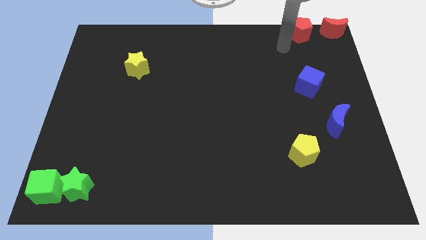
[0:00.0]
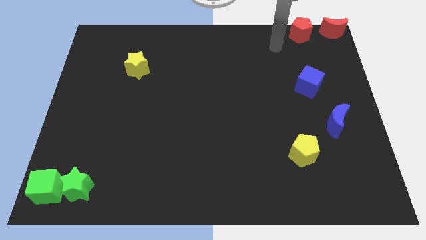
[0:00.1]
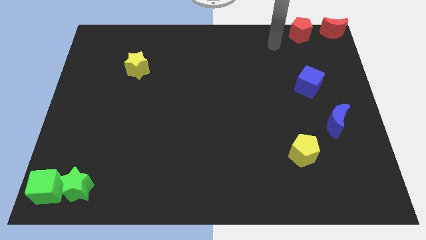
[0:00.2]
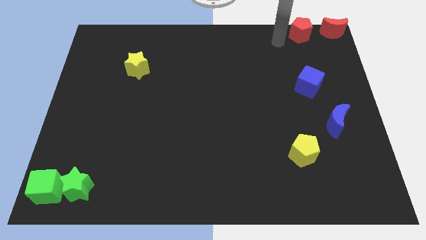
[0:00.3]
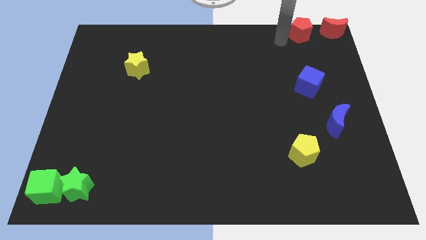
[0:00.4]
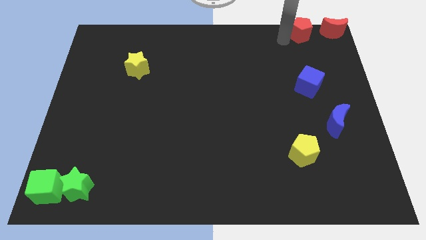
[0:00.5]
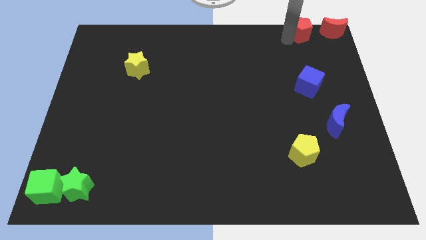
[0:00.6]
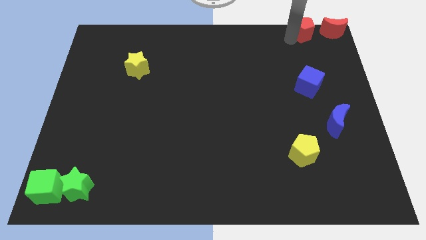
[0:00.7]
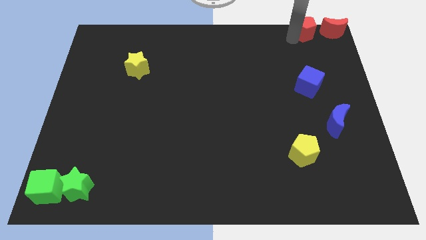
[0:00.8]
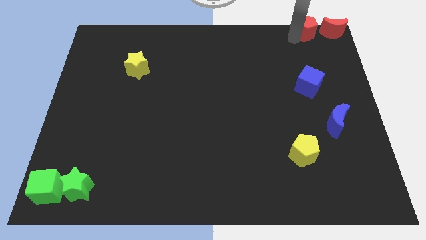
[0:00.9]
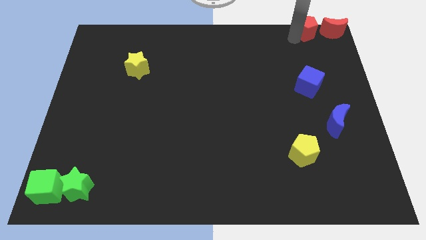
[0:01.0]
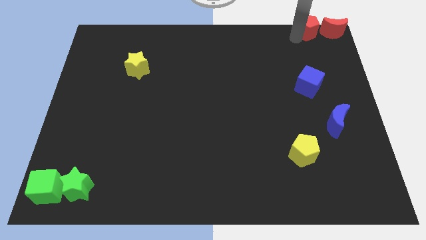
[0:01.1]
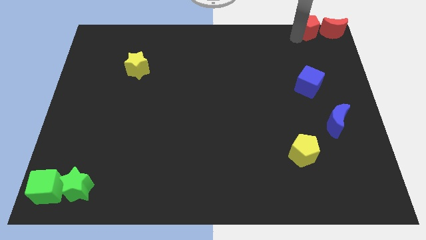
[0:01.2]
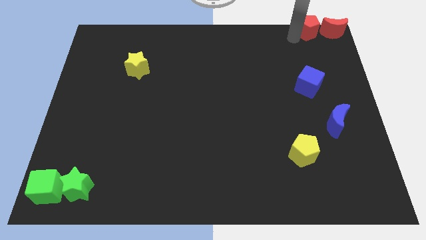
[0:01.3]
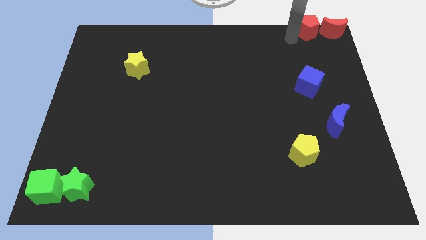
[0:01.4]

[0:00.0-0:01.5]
move the red pentagon close to red crescent

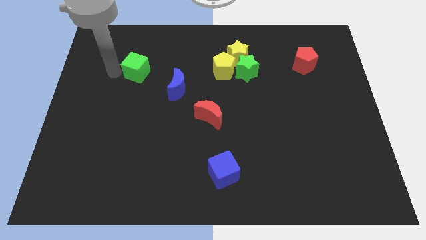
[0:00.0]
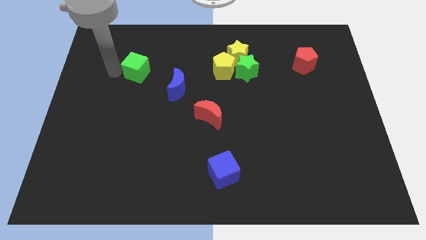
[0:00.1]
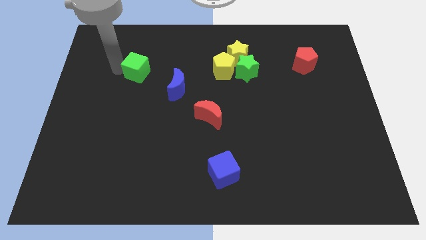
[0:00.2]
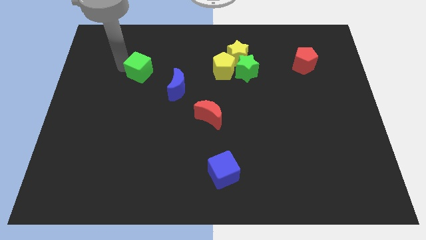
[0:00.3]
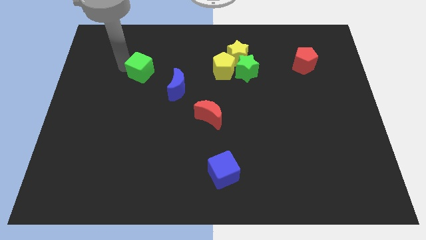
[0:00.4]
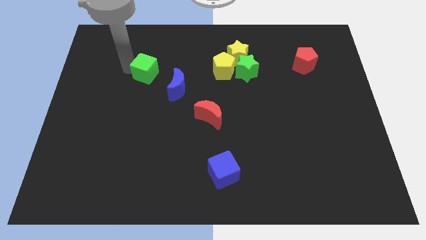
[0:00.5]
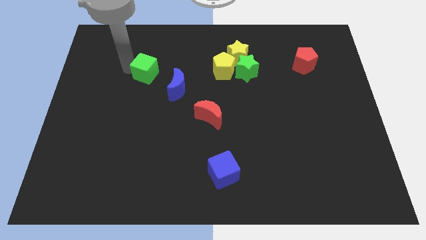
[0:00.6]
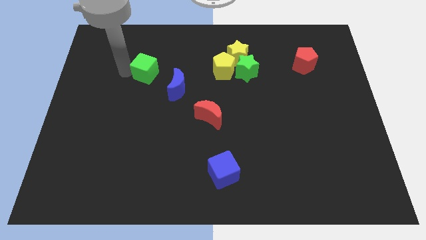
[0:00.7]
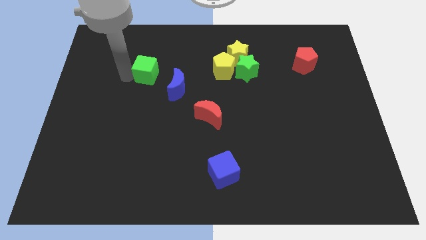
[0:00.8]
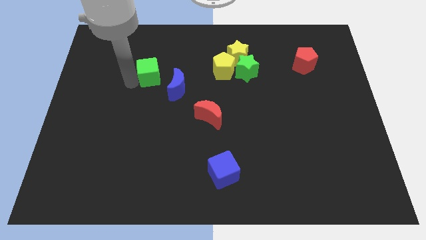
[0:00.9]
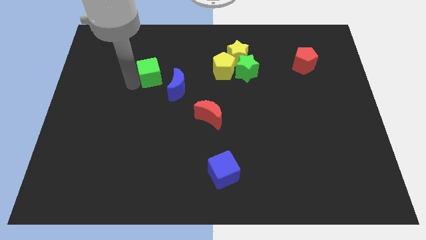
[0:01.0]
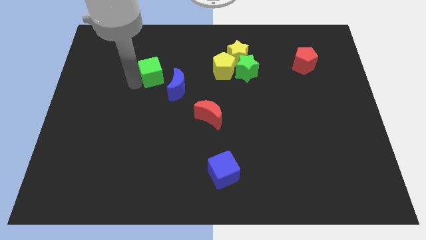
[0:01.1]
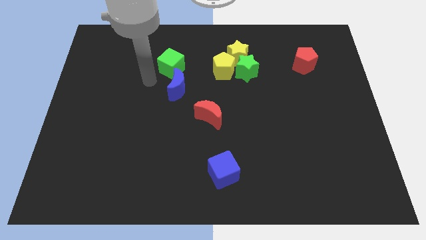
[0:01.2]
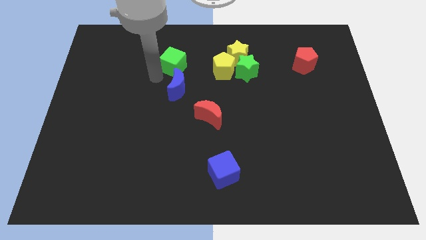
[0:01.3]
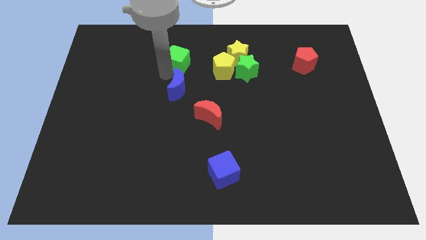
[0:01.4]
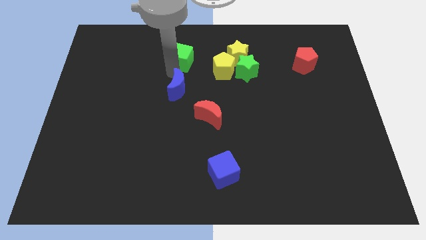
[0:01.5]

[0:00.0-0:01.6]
push the green cube above the blue crescent

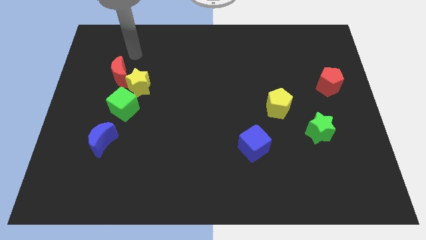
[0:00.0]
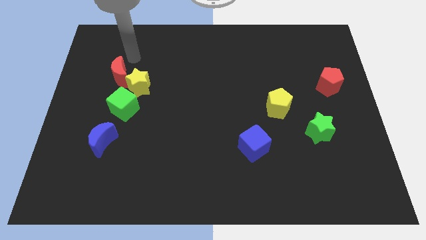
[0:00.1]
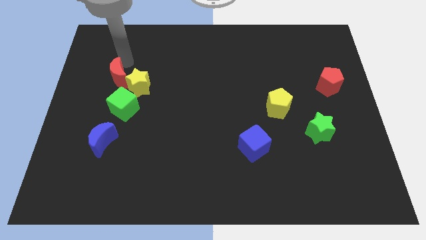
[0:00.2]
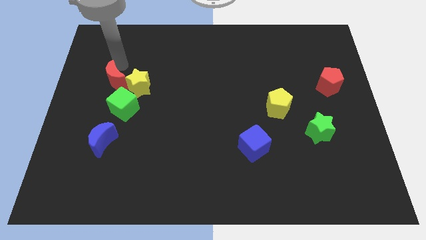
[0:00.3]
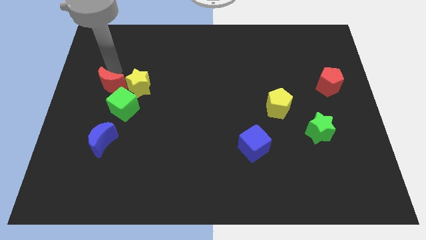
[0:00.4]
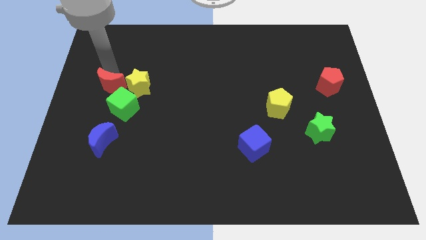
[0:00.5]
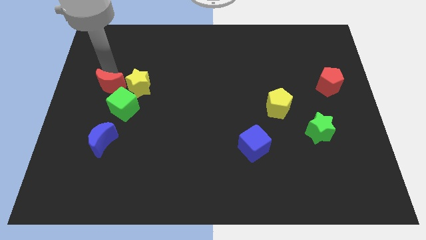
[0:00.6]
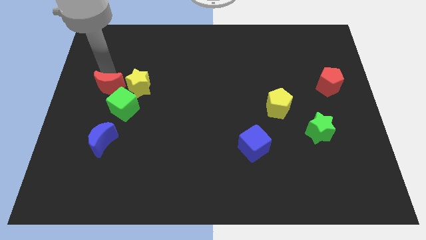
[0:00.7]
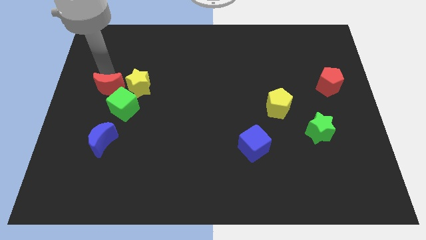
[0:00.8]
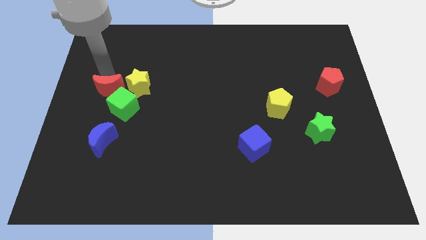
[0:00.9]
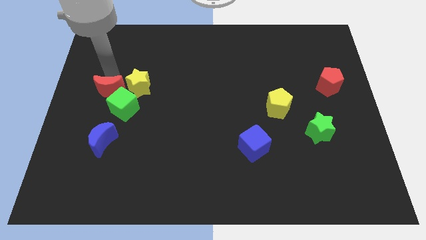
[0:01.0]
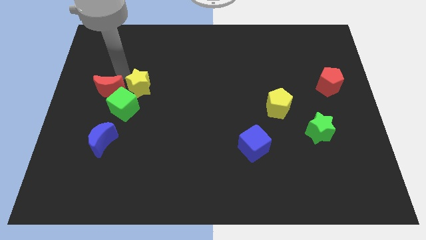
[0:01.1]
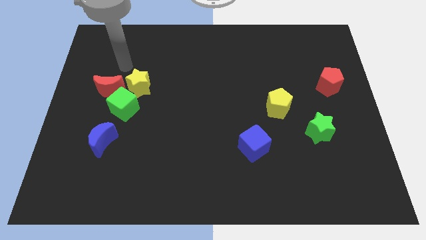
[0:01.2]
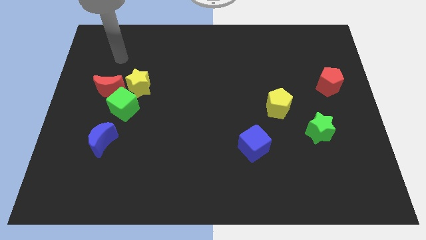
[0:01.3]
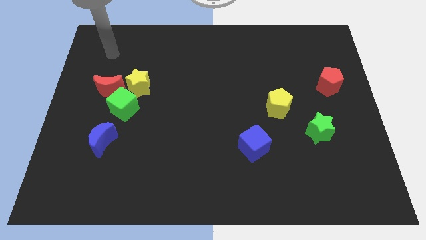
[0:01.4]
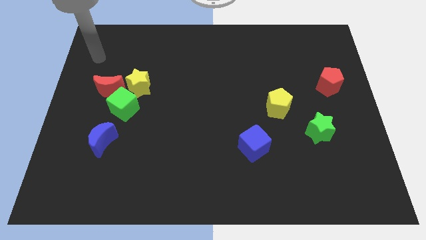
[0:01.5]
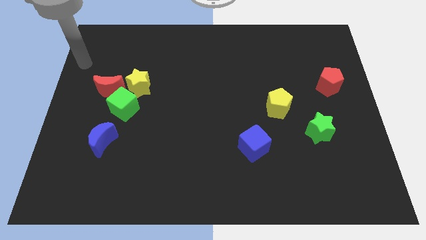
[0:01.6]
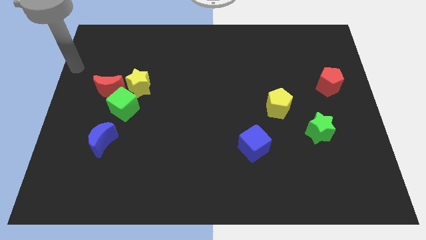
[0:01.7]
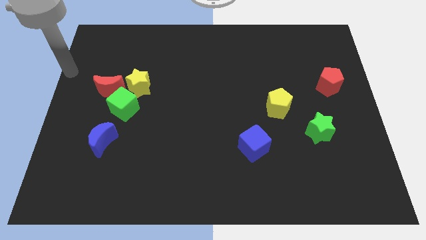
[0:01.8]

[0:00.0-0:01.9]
place the red crescent to the left of the yellow star

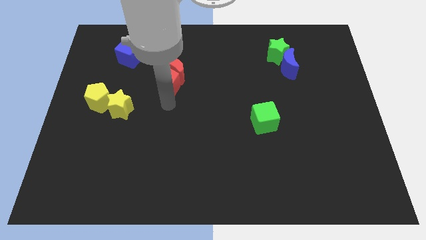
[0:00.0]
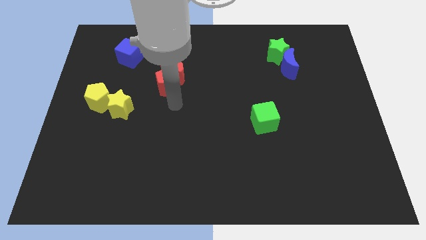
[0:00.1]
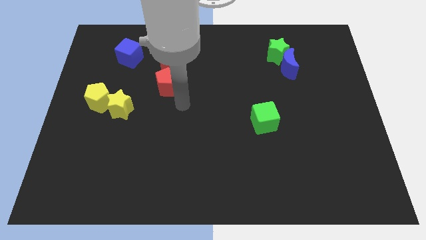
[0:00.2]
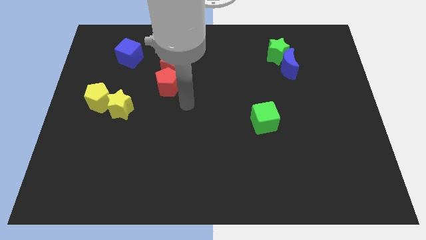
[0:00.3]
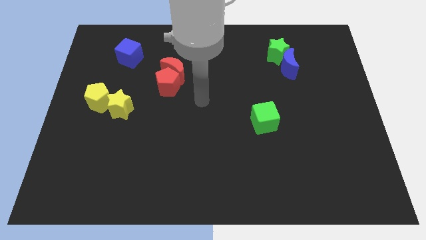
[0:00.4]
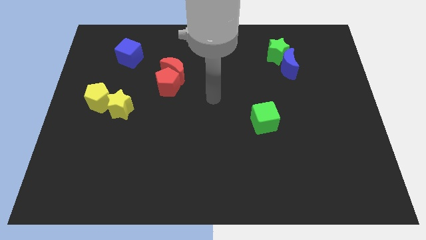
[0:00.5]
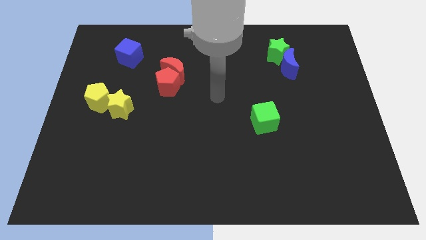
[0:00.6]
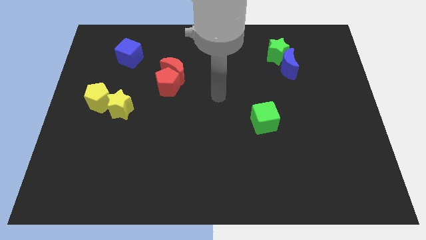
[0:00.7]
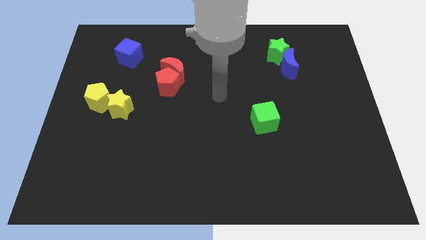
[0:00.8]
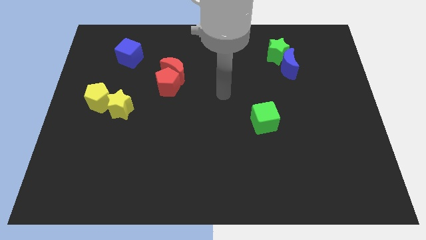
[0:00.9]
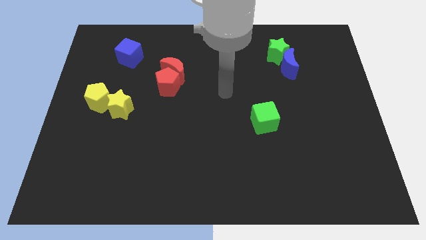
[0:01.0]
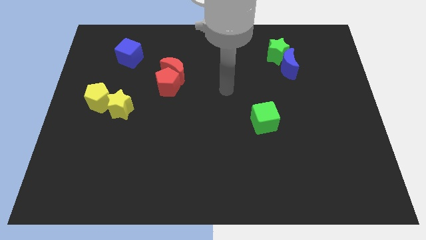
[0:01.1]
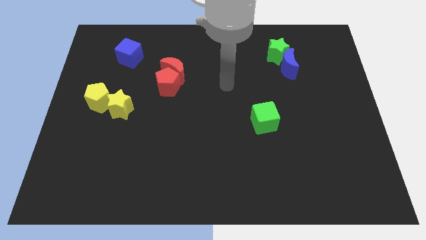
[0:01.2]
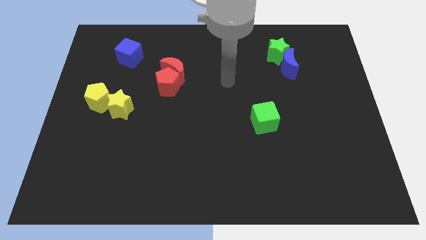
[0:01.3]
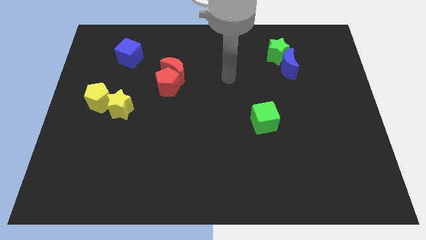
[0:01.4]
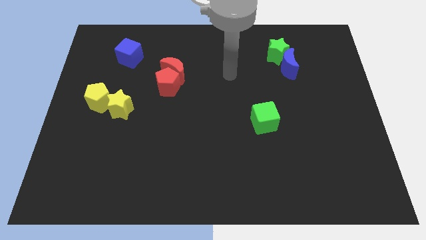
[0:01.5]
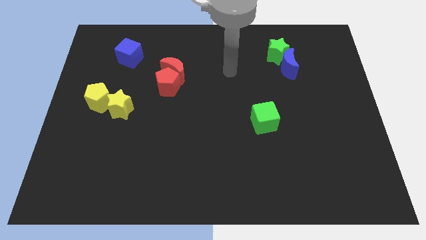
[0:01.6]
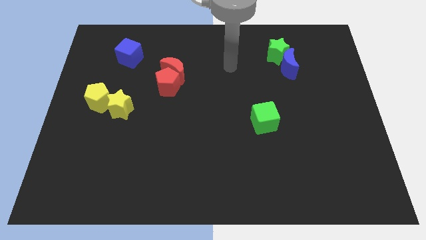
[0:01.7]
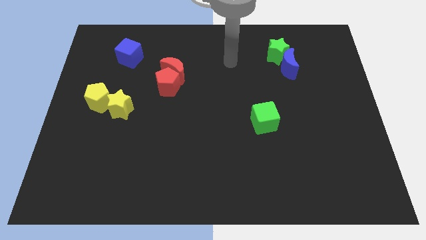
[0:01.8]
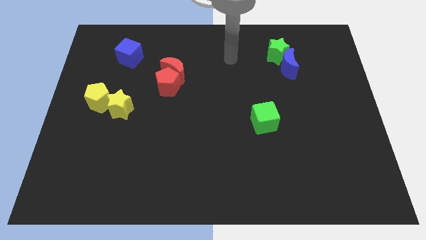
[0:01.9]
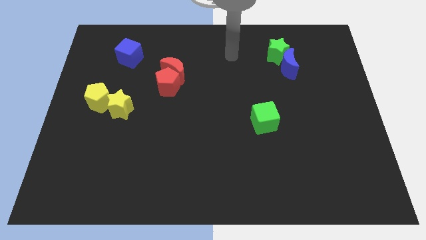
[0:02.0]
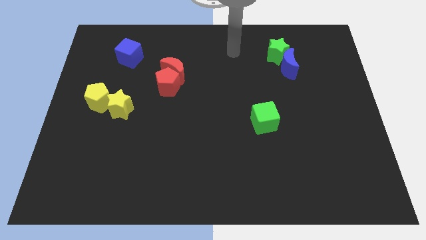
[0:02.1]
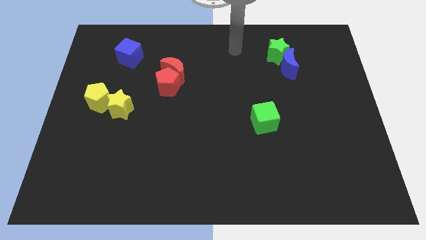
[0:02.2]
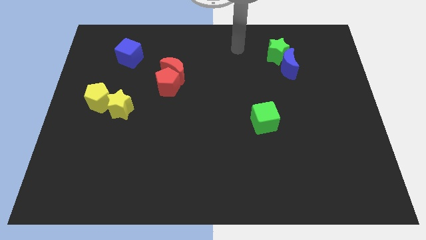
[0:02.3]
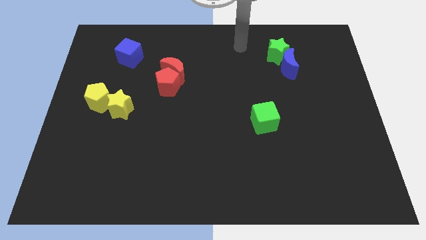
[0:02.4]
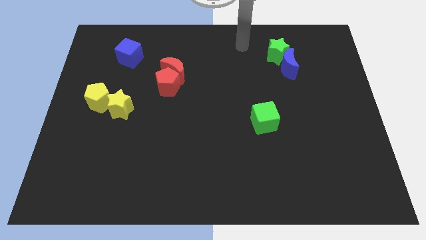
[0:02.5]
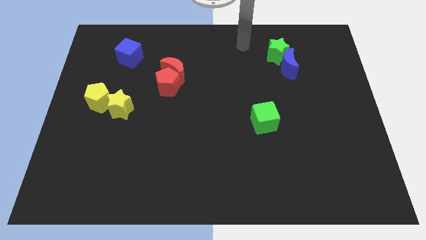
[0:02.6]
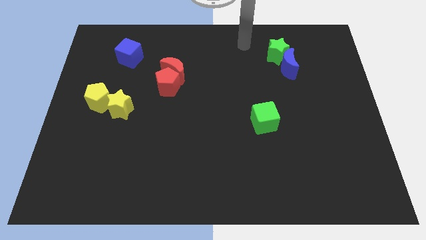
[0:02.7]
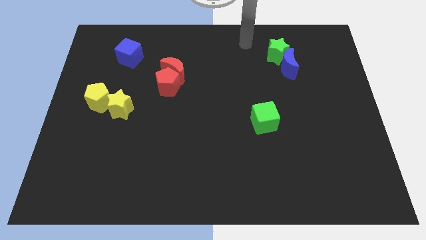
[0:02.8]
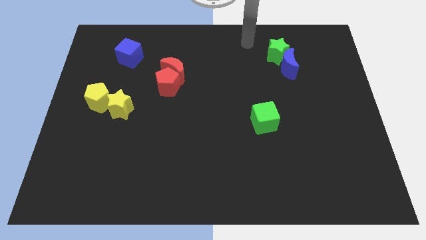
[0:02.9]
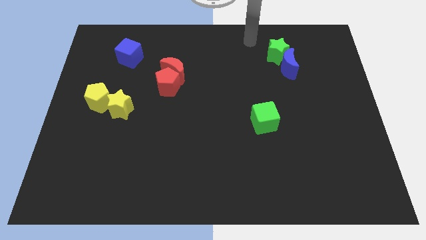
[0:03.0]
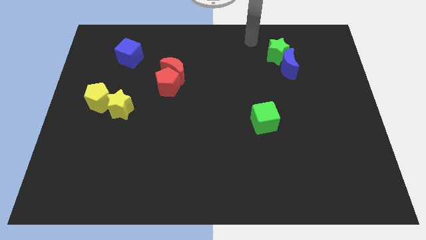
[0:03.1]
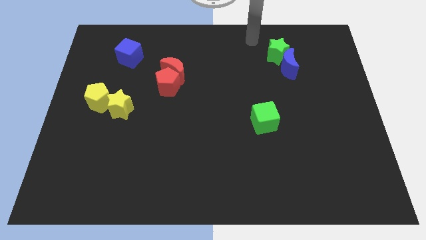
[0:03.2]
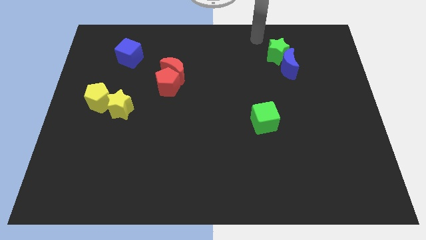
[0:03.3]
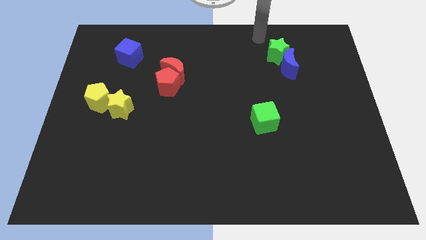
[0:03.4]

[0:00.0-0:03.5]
move your arm to the top side of the table

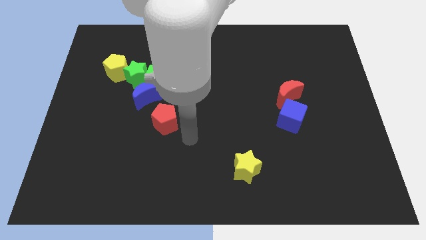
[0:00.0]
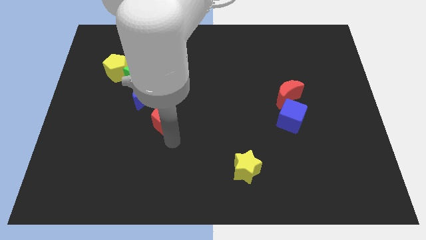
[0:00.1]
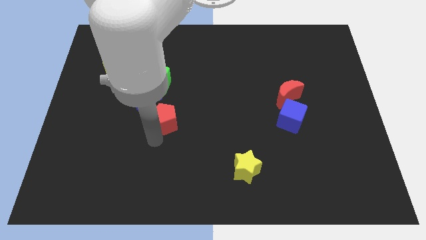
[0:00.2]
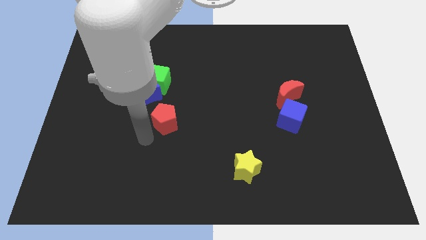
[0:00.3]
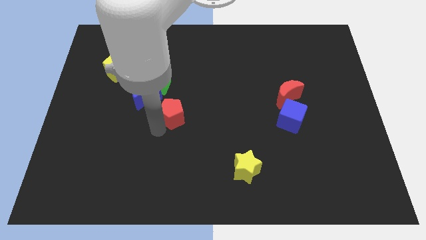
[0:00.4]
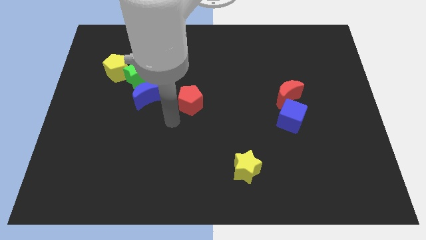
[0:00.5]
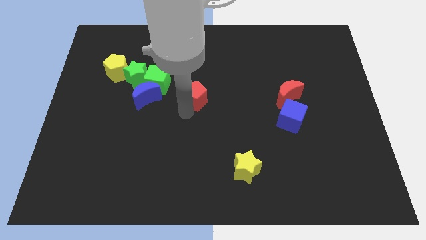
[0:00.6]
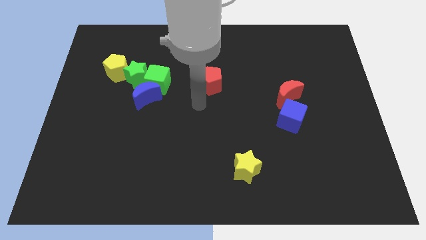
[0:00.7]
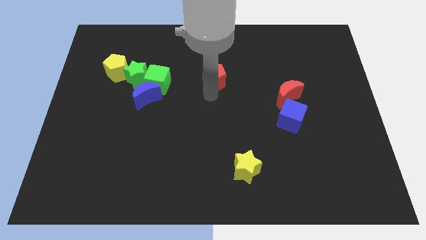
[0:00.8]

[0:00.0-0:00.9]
place the red pentagon left to the blue cube
